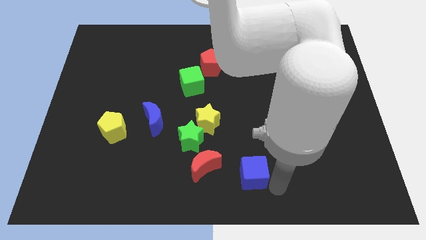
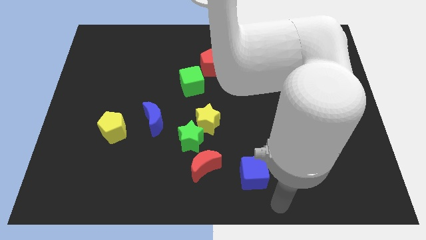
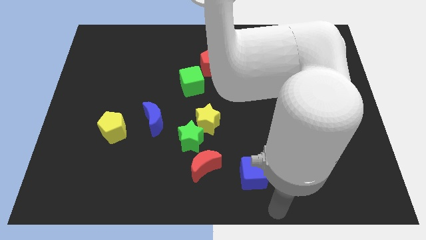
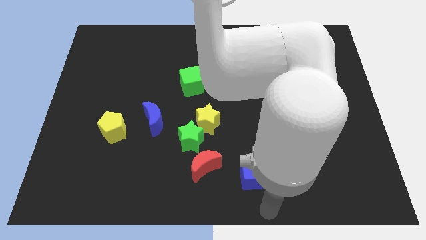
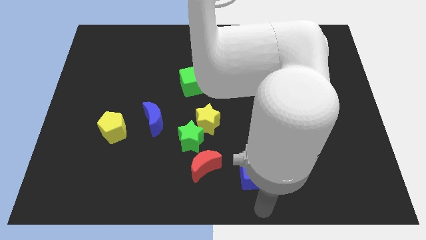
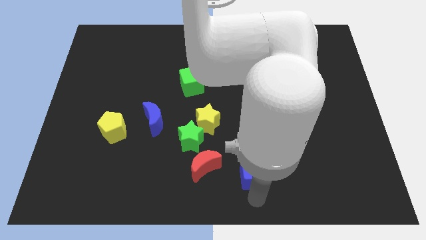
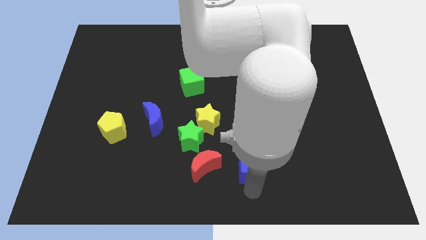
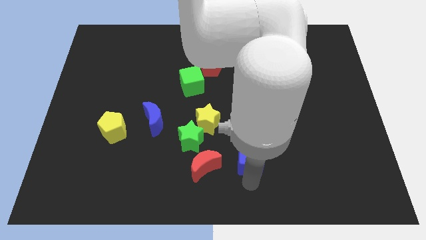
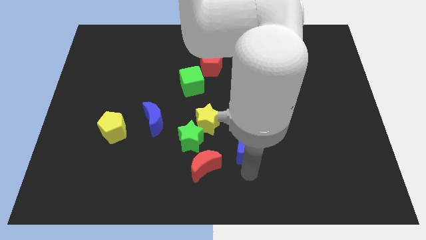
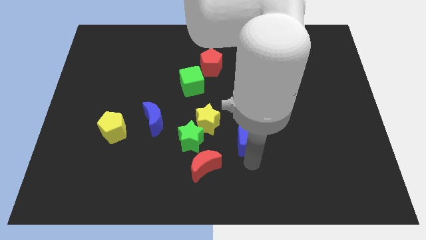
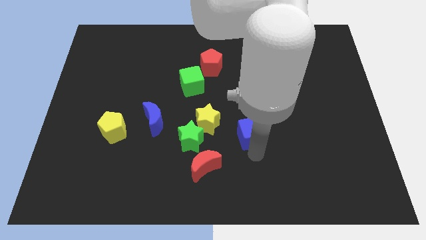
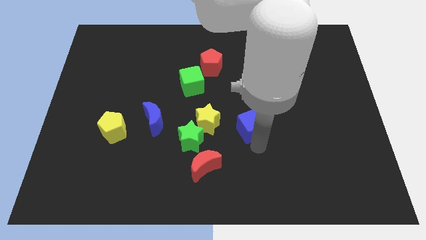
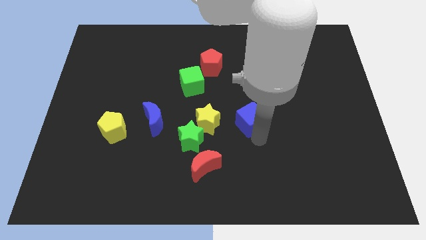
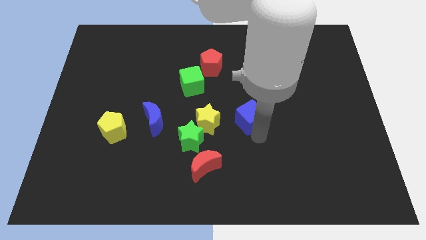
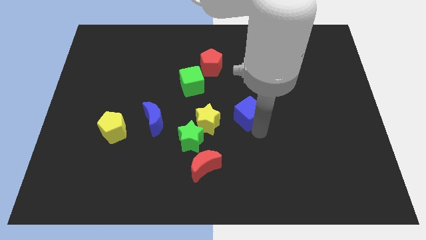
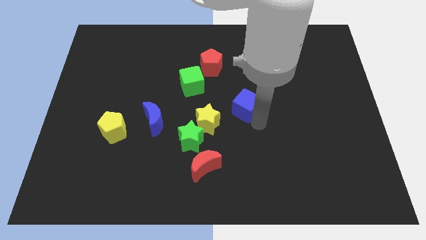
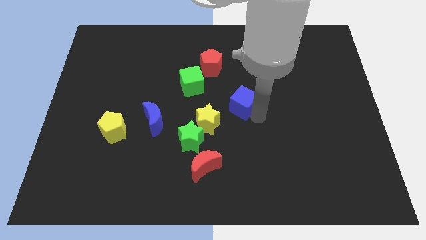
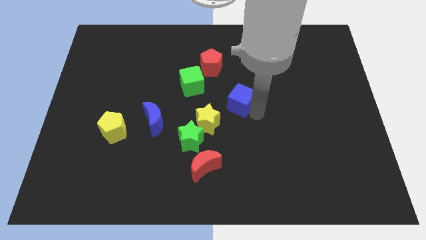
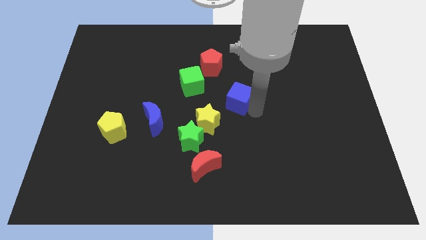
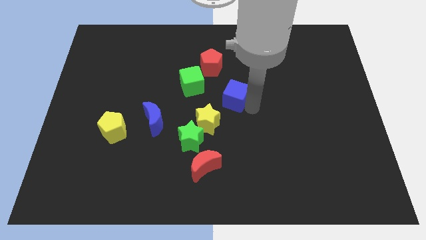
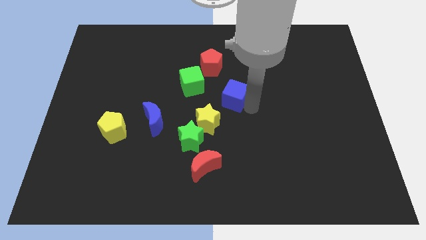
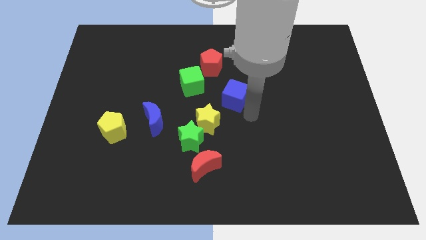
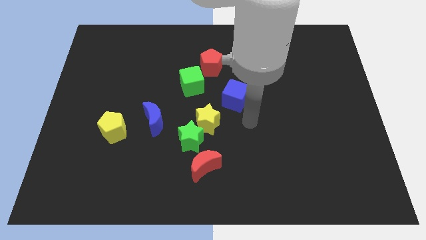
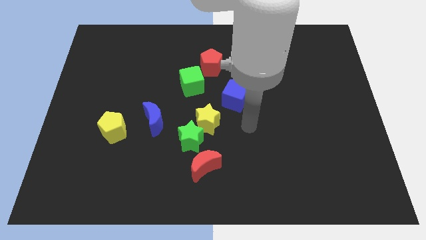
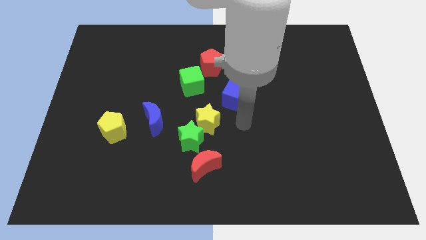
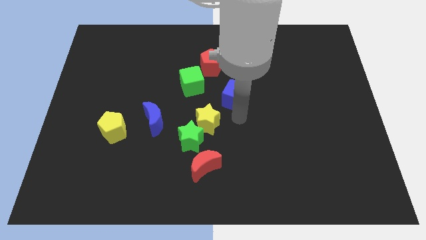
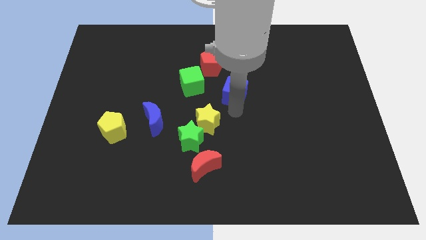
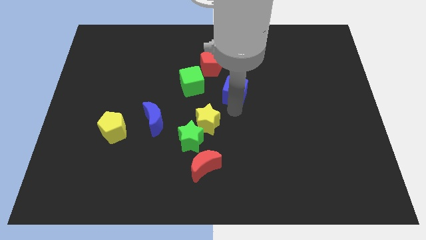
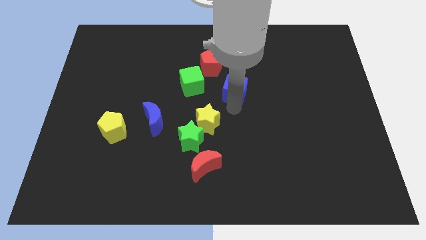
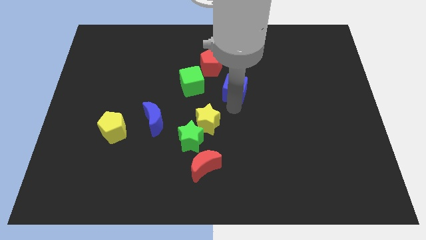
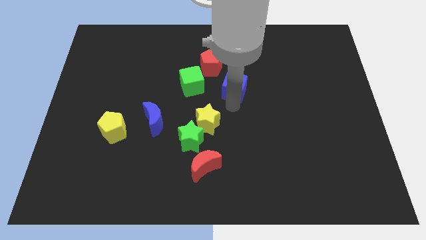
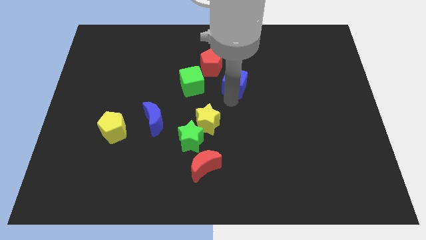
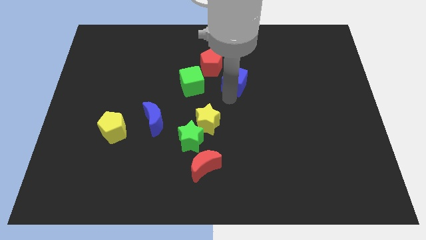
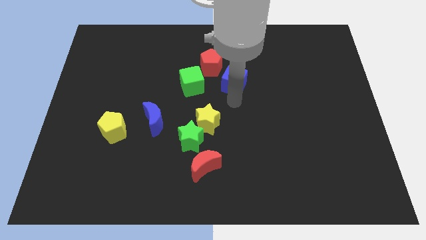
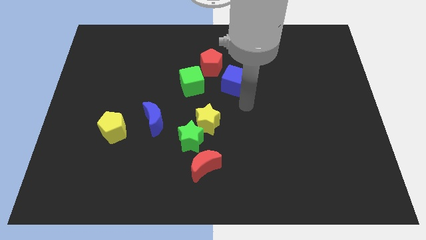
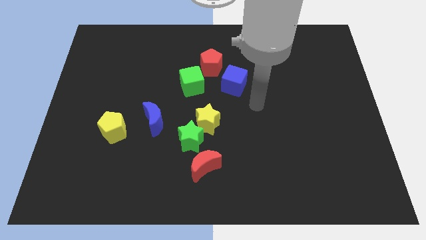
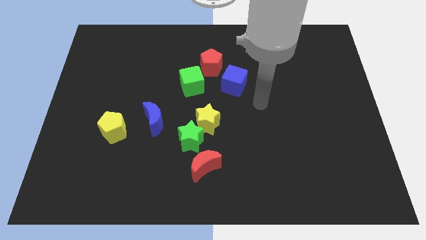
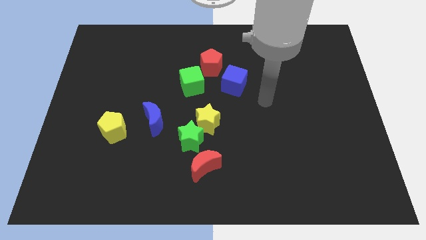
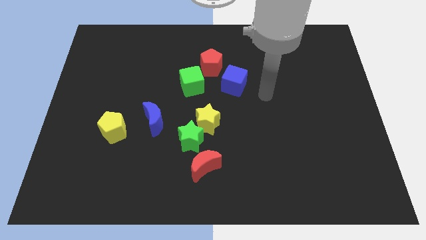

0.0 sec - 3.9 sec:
push the blue cube slightly to the top

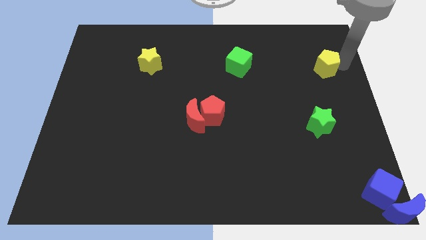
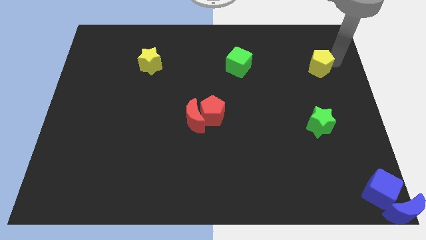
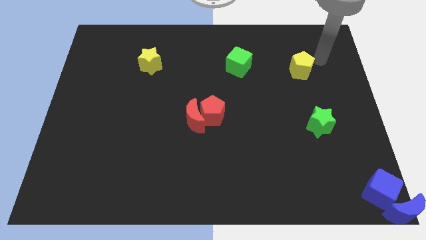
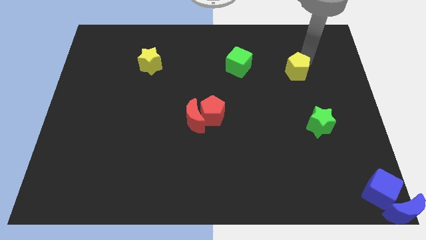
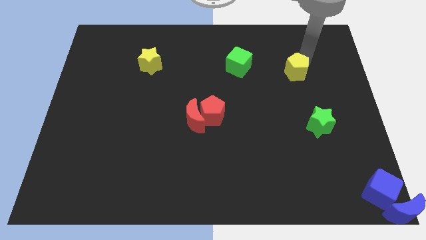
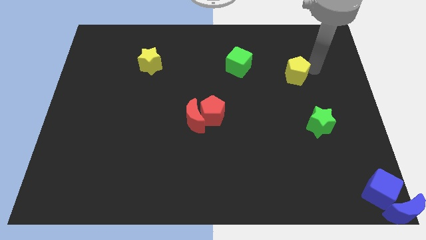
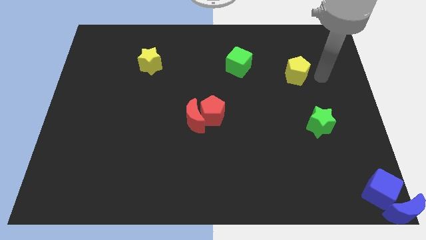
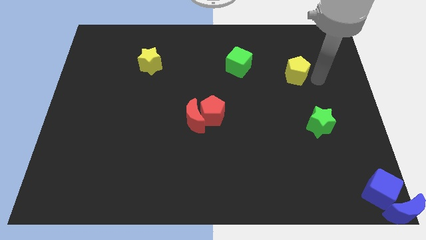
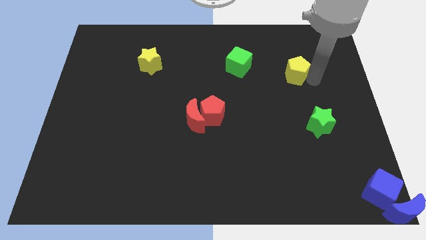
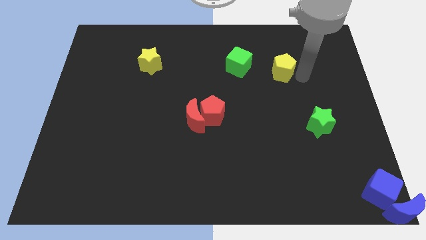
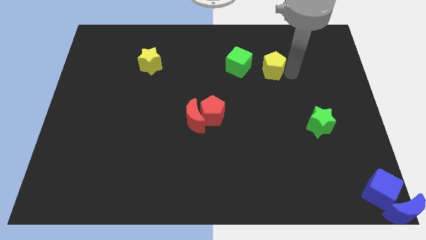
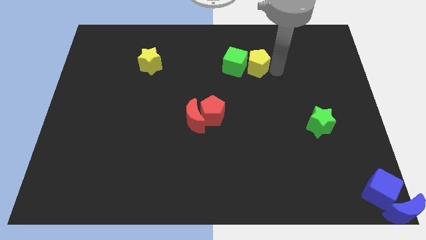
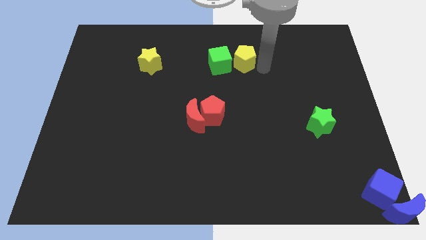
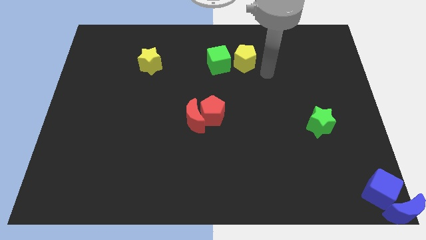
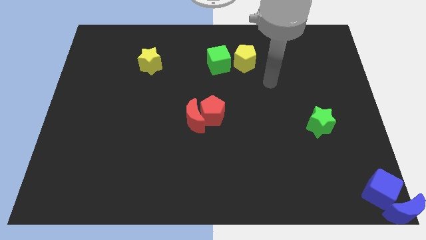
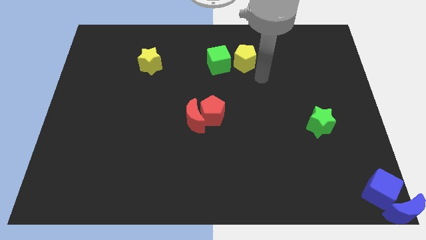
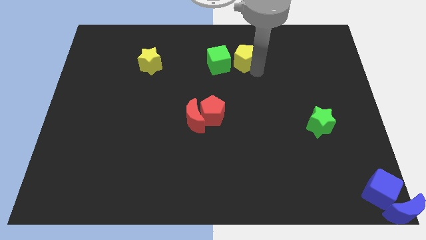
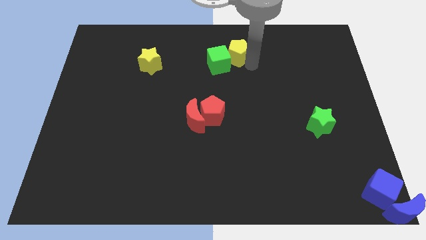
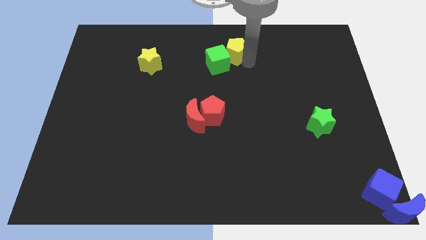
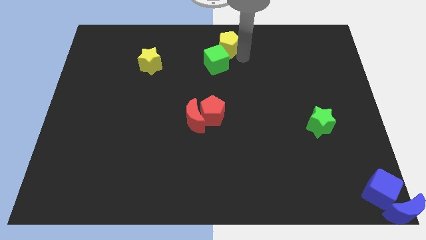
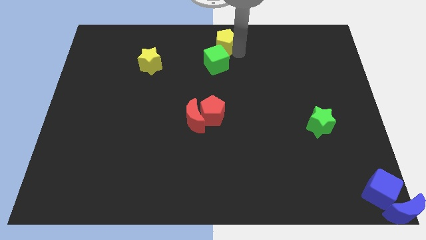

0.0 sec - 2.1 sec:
place yellow pentagon above the green cube

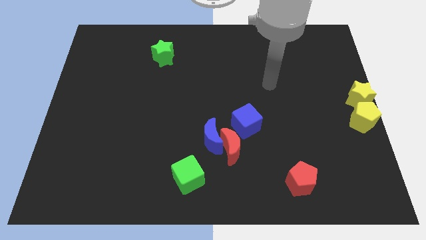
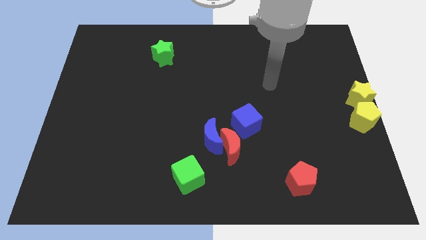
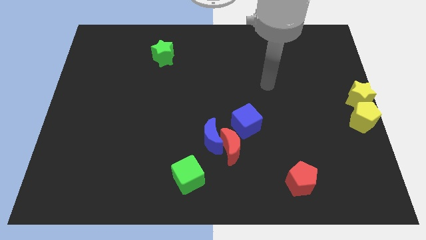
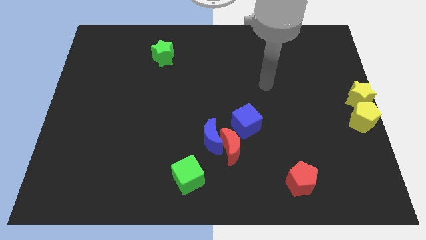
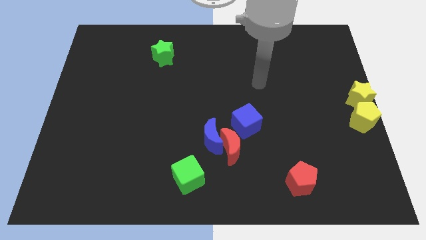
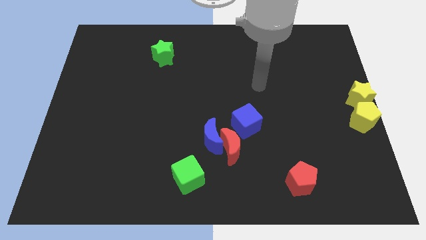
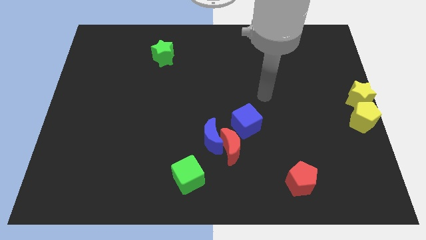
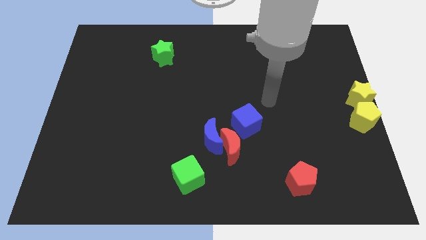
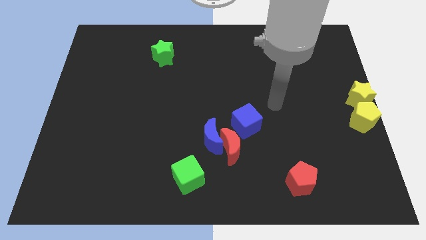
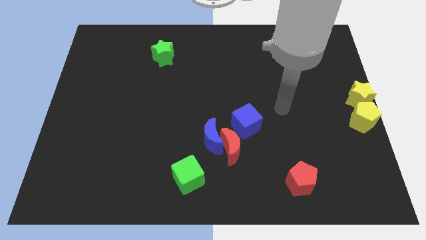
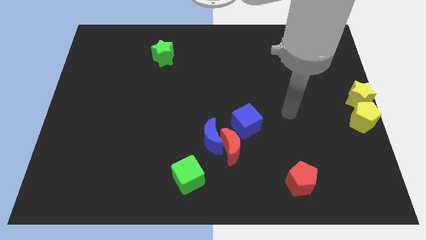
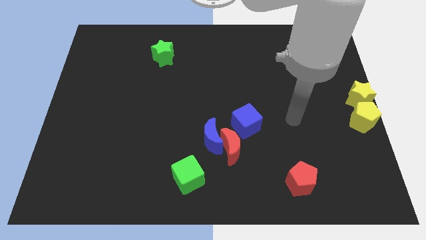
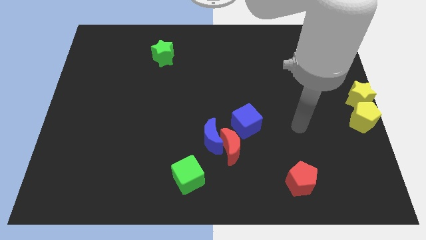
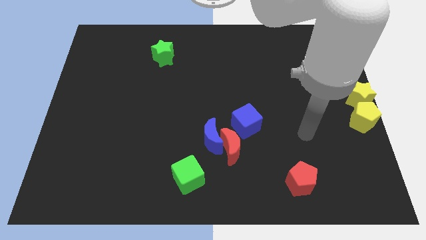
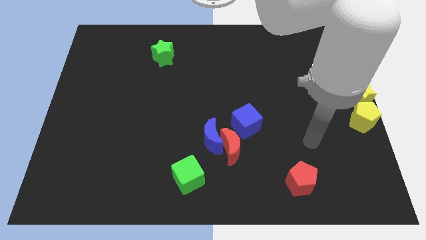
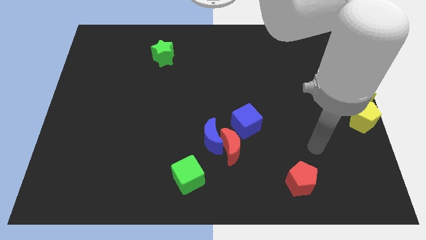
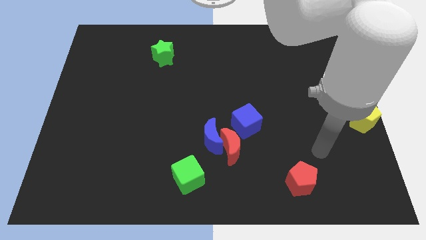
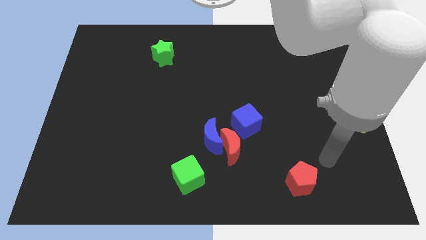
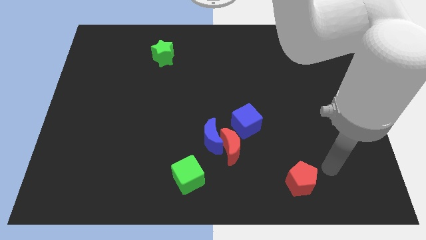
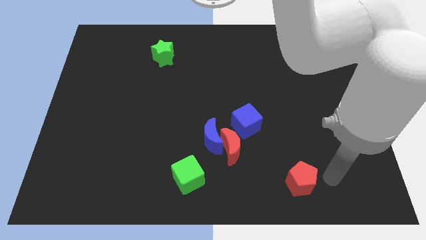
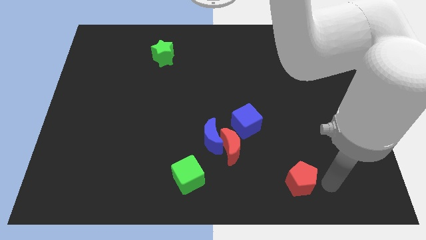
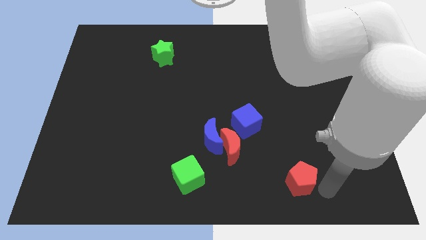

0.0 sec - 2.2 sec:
point your arm right to red pentagon

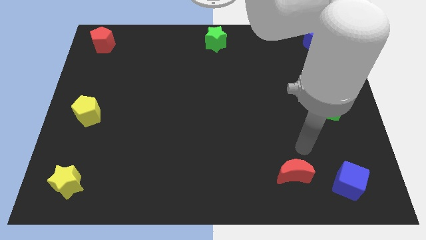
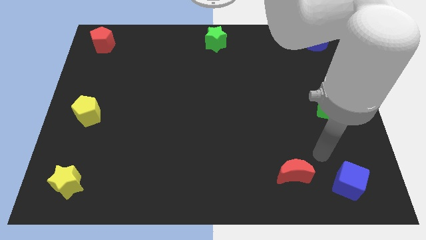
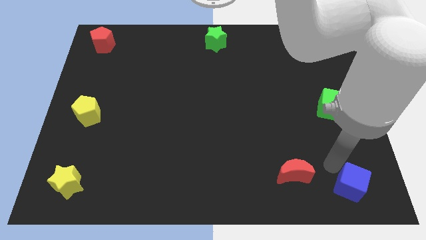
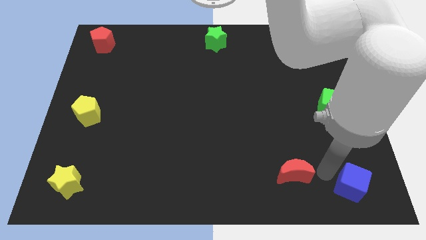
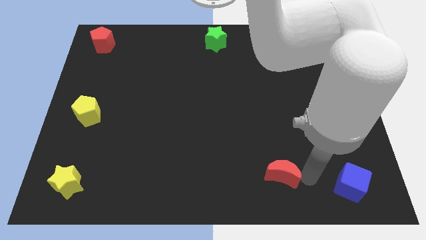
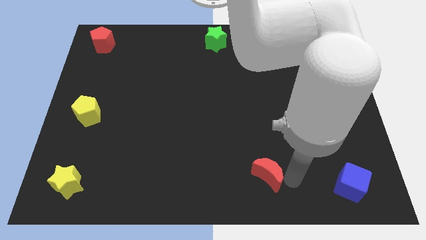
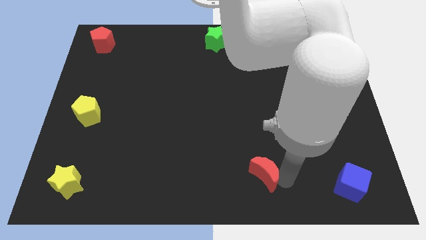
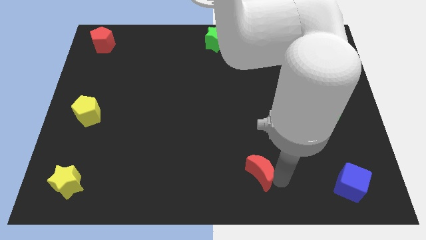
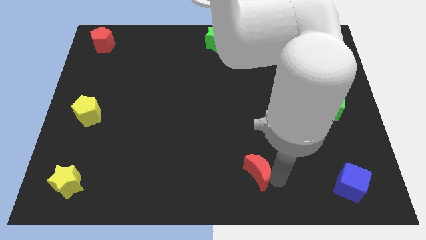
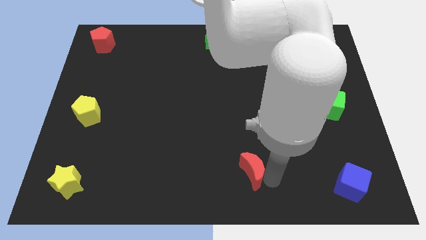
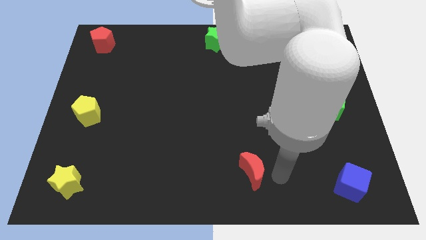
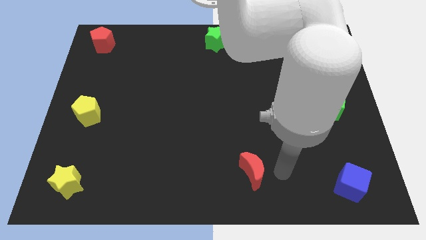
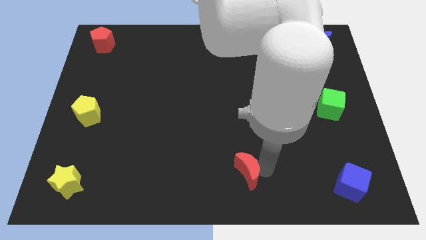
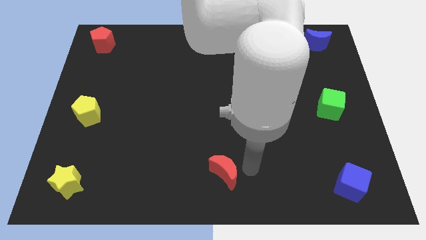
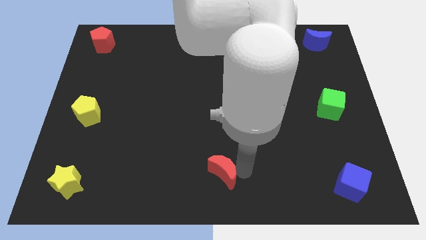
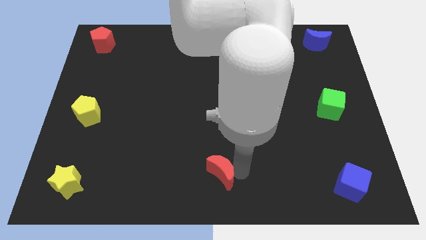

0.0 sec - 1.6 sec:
push the red moon to the bottom center of the grid
